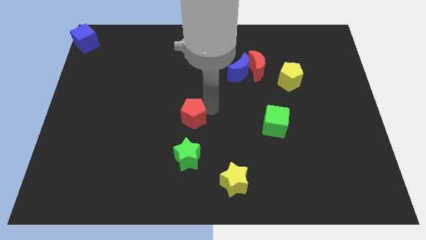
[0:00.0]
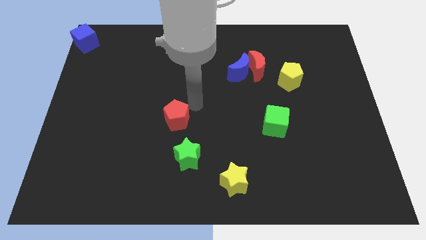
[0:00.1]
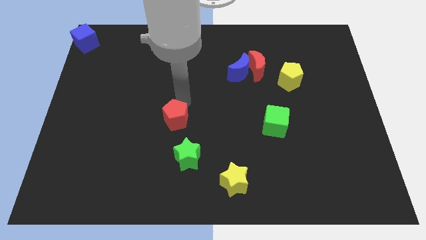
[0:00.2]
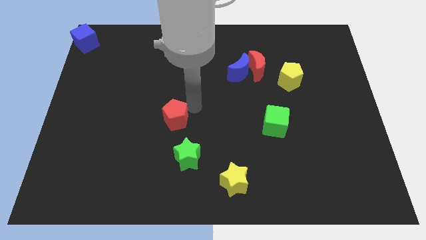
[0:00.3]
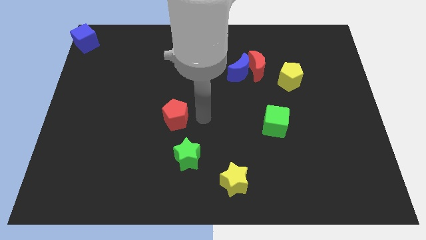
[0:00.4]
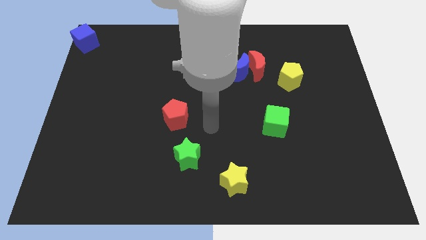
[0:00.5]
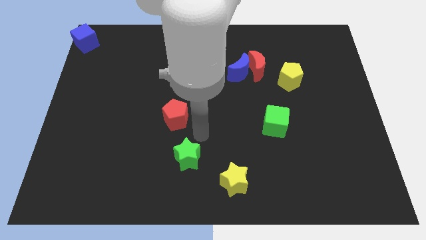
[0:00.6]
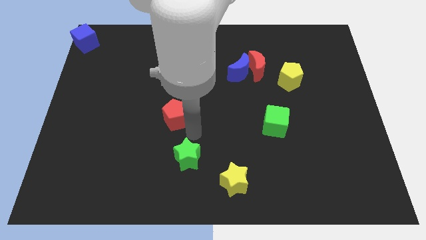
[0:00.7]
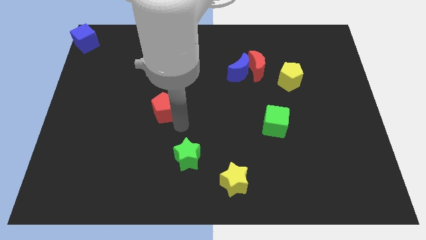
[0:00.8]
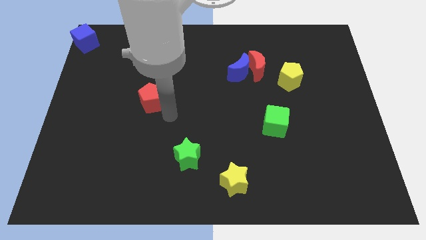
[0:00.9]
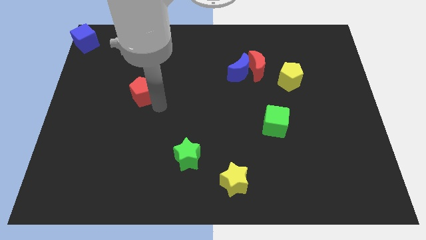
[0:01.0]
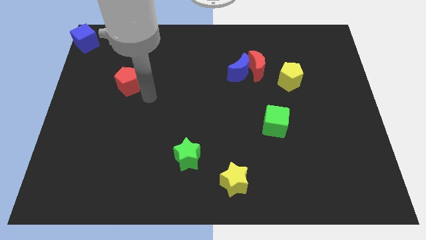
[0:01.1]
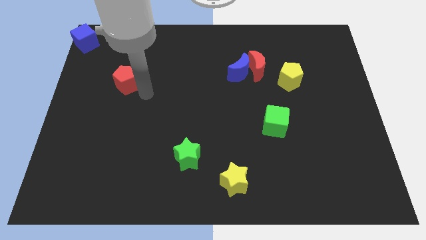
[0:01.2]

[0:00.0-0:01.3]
move the red pentagon towards the blue cube

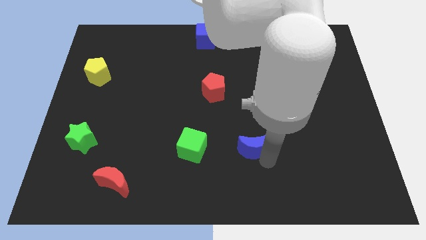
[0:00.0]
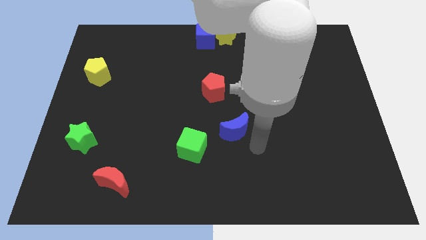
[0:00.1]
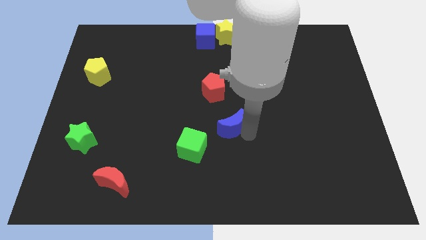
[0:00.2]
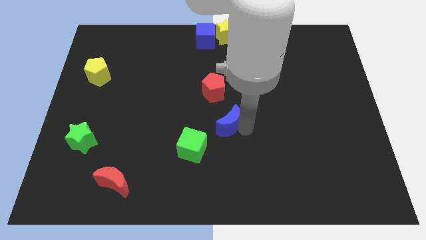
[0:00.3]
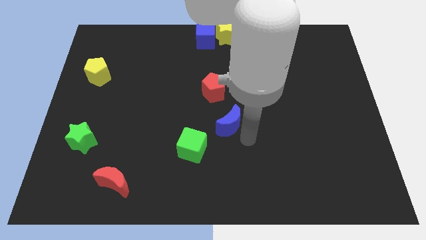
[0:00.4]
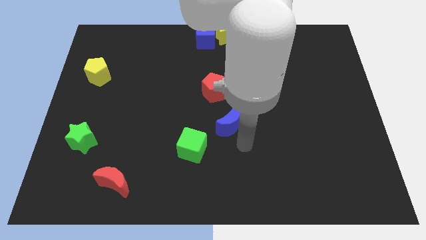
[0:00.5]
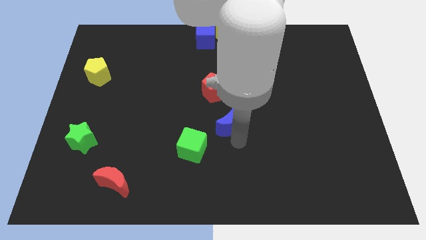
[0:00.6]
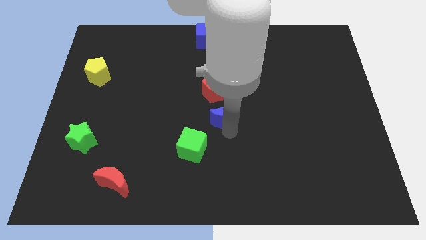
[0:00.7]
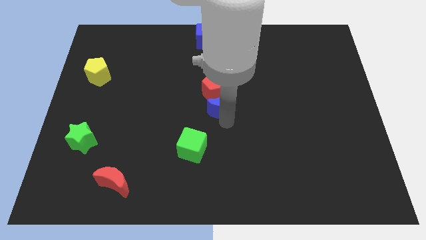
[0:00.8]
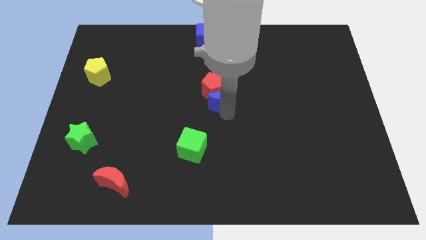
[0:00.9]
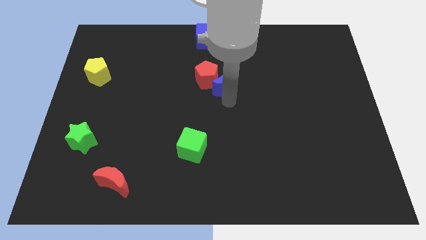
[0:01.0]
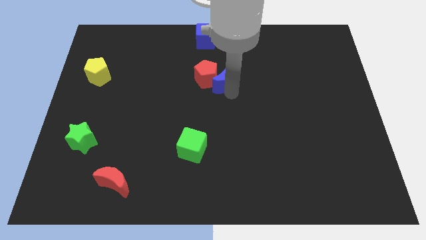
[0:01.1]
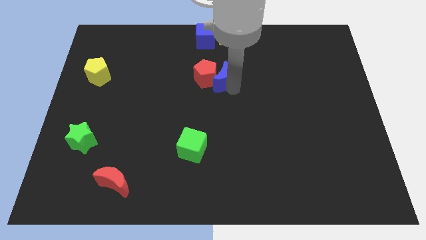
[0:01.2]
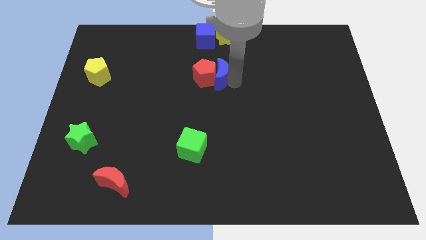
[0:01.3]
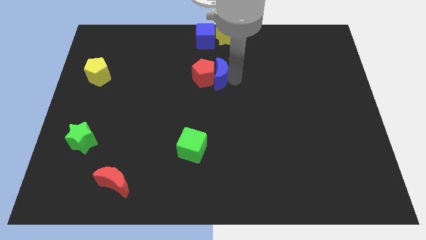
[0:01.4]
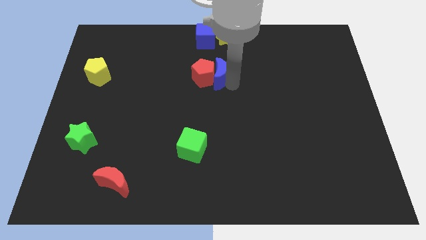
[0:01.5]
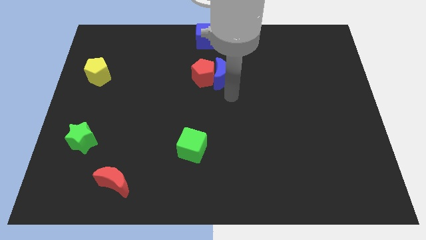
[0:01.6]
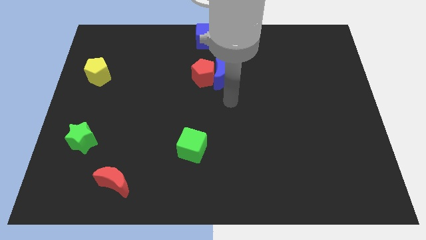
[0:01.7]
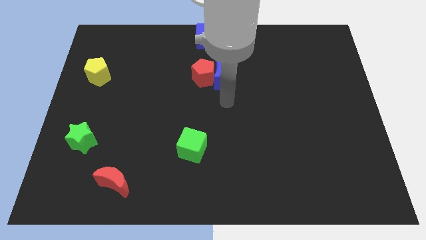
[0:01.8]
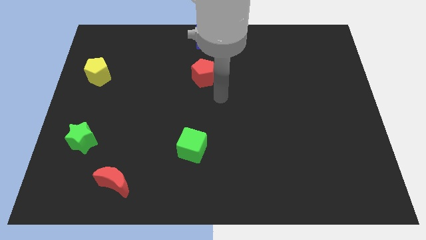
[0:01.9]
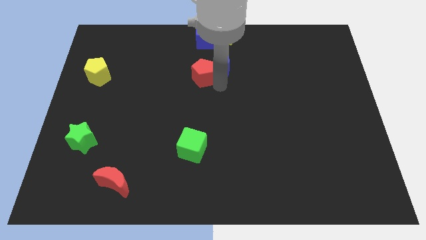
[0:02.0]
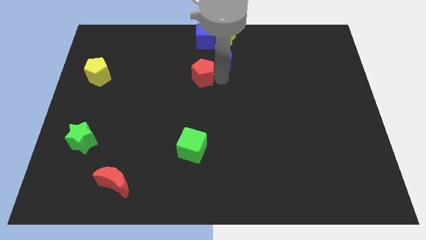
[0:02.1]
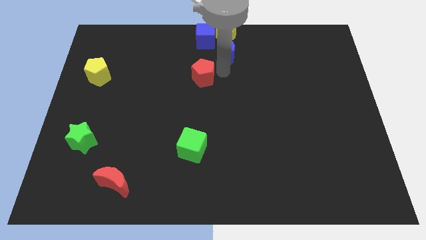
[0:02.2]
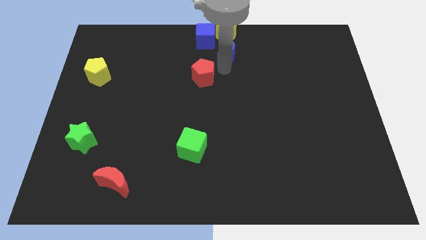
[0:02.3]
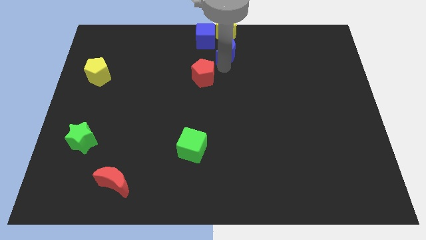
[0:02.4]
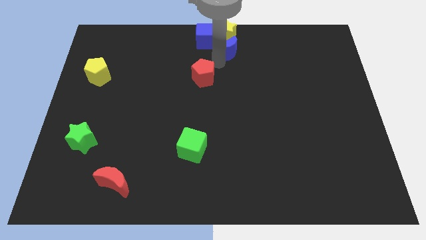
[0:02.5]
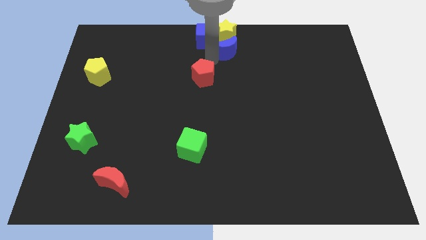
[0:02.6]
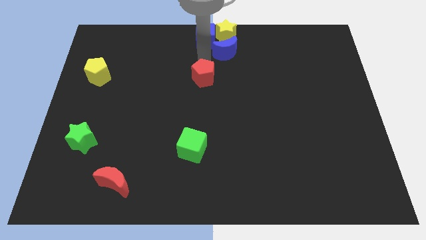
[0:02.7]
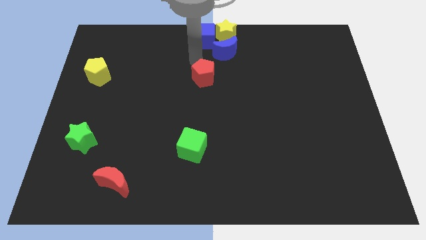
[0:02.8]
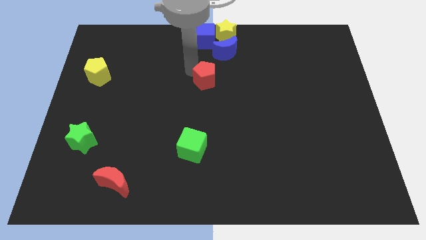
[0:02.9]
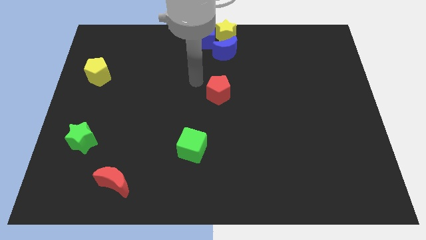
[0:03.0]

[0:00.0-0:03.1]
slide the blue moon to the bottom of the yellow star

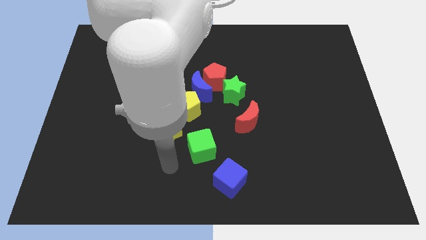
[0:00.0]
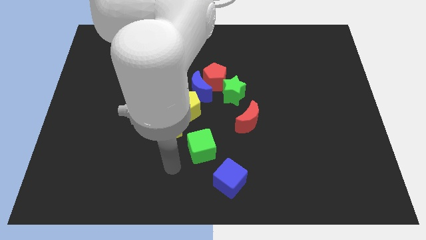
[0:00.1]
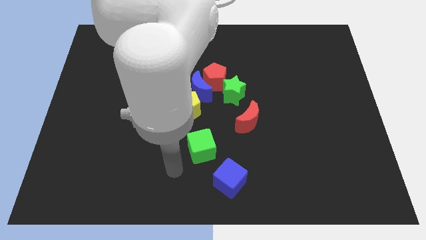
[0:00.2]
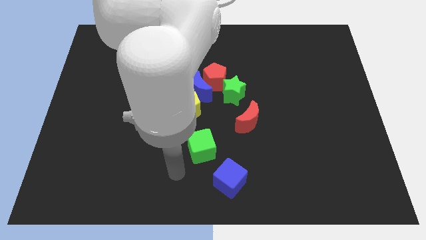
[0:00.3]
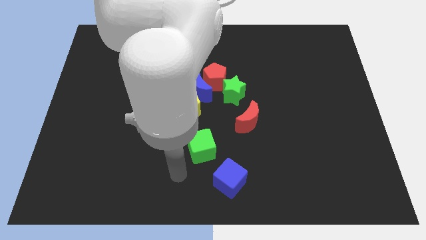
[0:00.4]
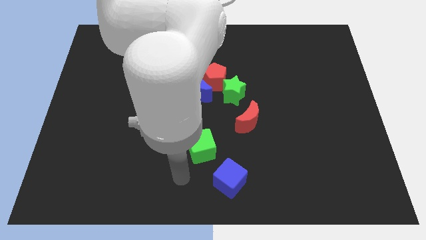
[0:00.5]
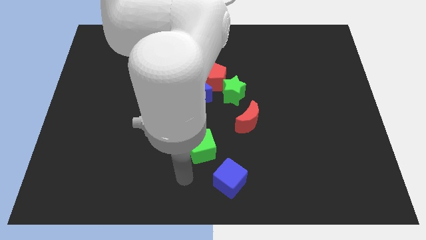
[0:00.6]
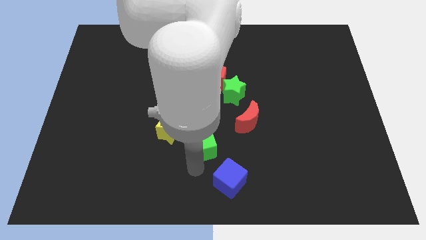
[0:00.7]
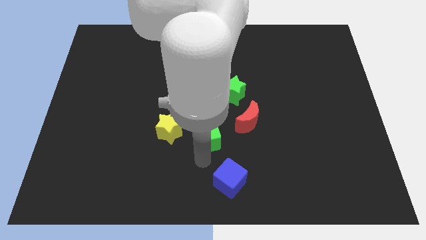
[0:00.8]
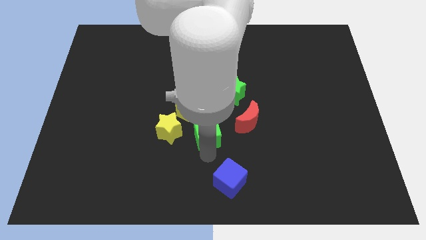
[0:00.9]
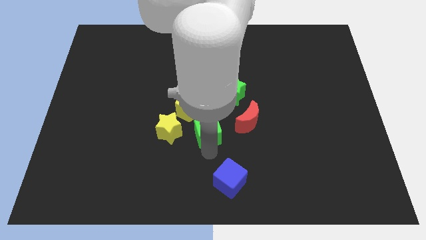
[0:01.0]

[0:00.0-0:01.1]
slightly push the green cube towards the center

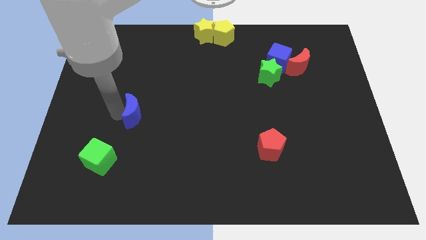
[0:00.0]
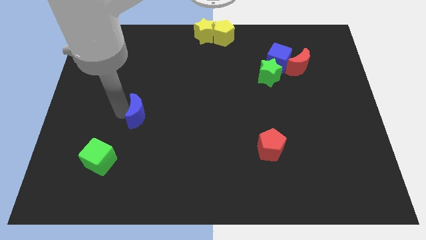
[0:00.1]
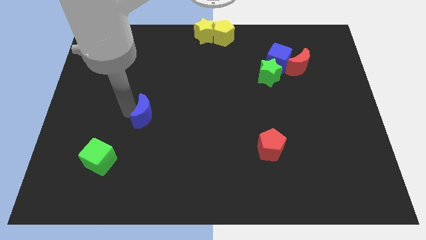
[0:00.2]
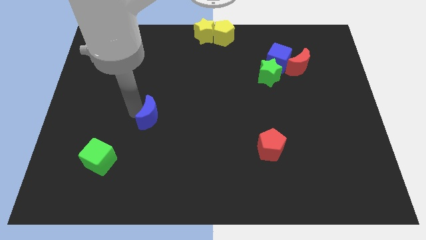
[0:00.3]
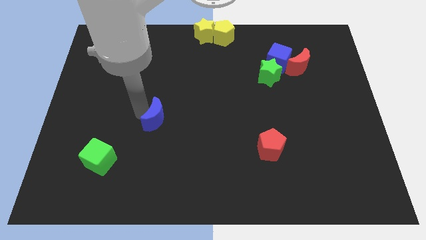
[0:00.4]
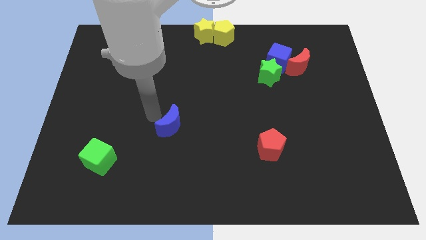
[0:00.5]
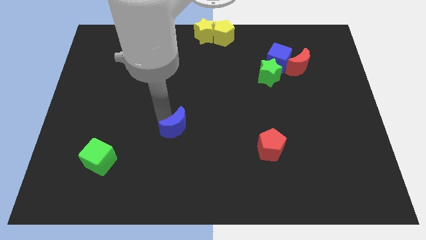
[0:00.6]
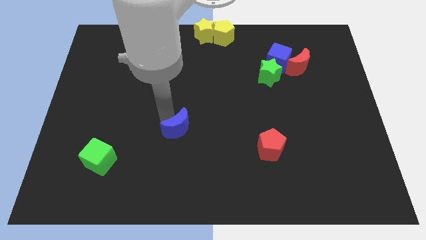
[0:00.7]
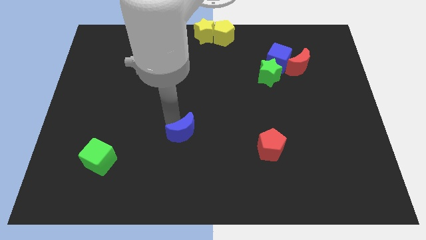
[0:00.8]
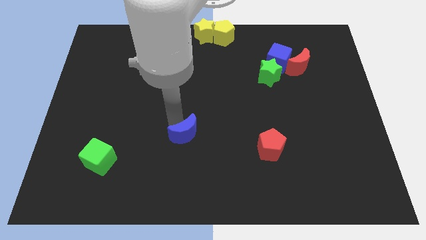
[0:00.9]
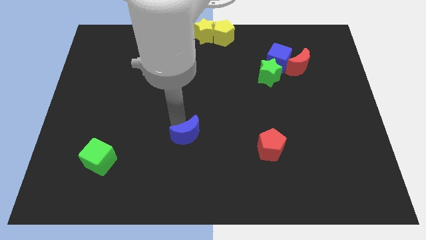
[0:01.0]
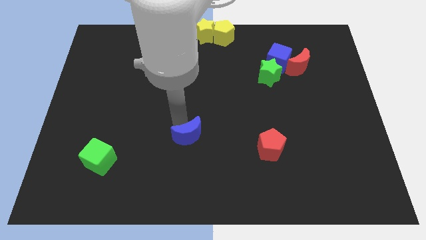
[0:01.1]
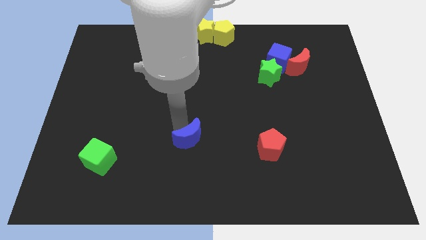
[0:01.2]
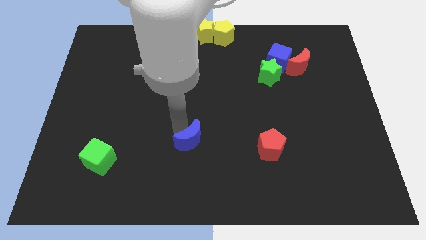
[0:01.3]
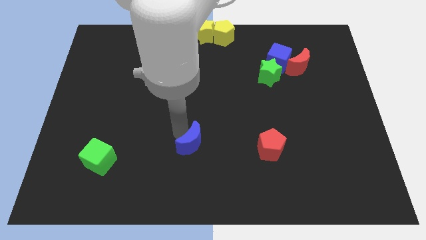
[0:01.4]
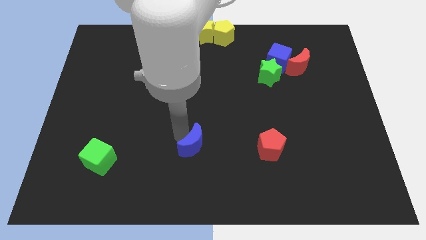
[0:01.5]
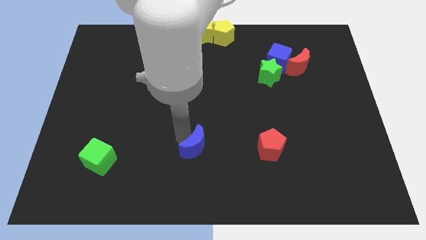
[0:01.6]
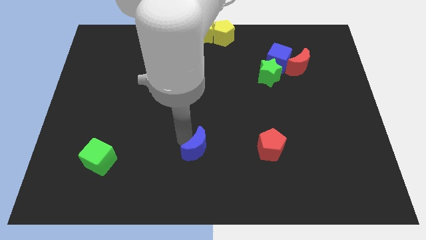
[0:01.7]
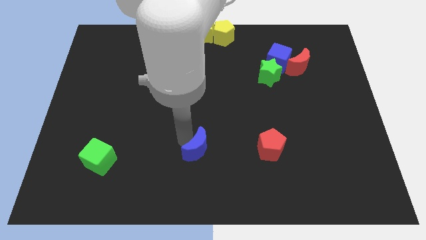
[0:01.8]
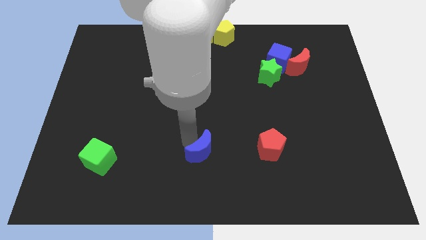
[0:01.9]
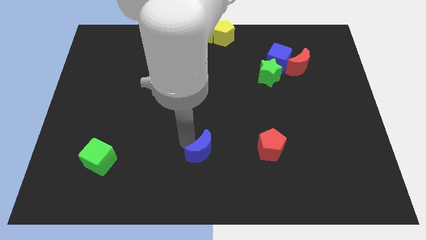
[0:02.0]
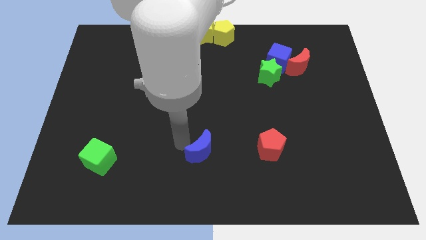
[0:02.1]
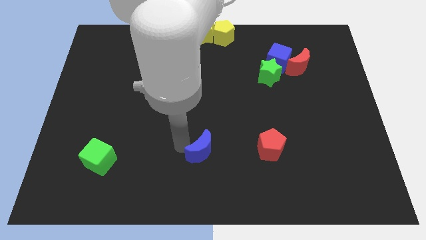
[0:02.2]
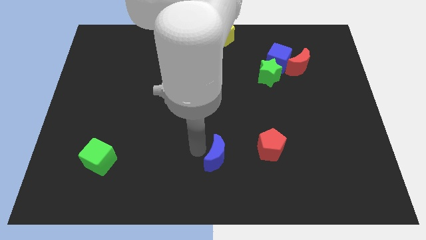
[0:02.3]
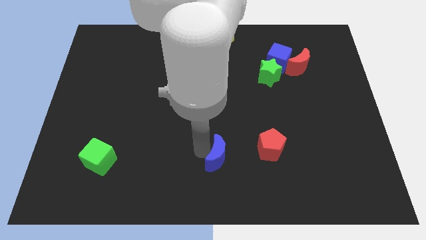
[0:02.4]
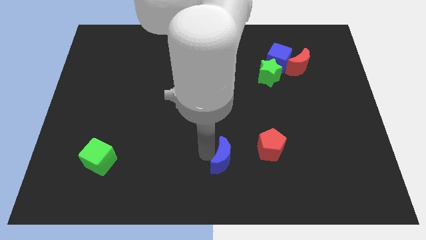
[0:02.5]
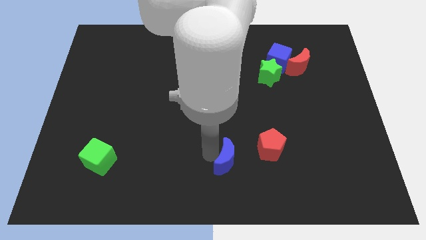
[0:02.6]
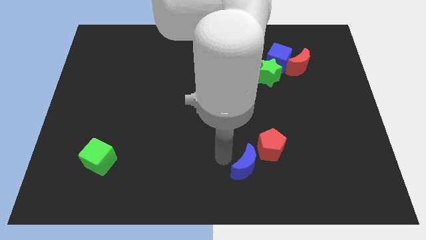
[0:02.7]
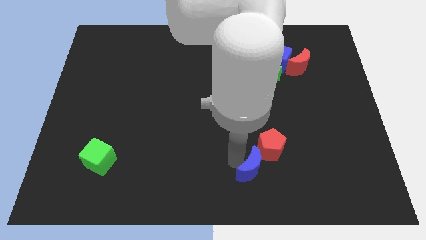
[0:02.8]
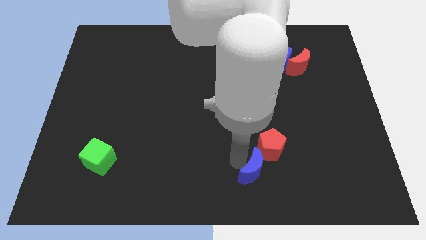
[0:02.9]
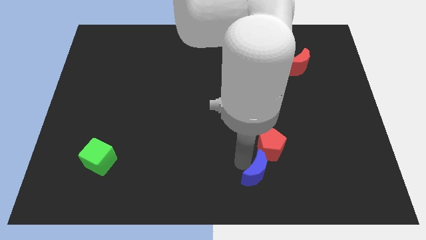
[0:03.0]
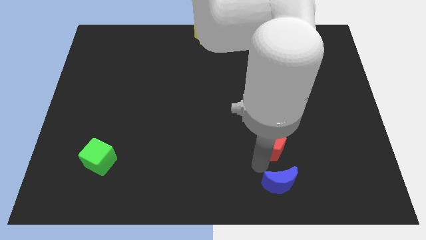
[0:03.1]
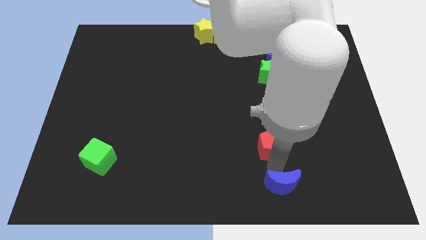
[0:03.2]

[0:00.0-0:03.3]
place blue moon below red pentagon
